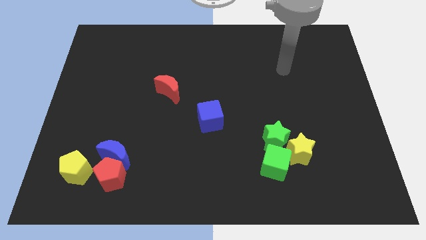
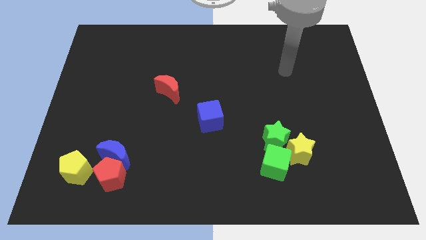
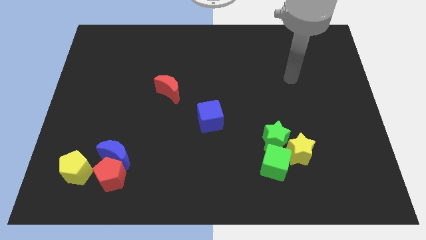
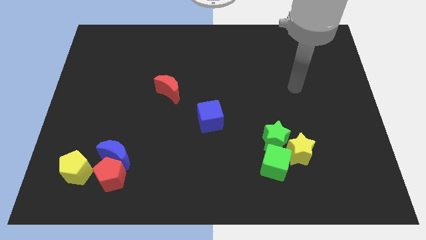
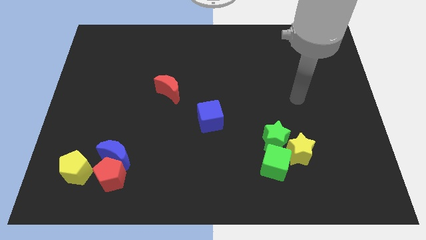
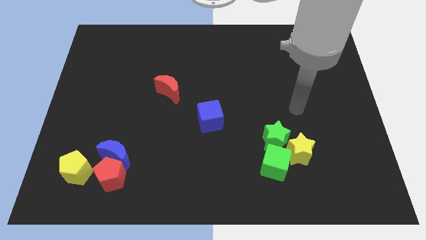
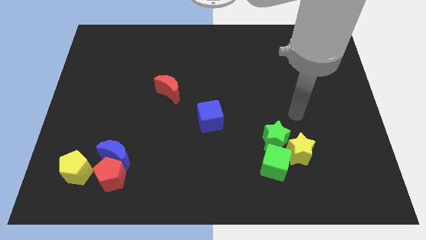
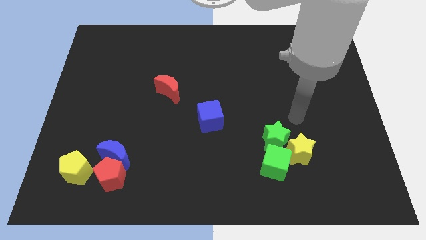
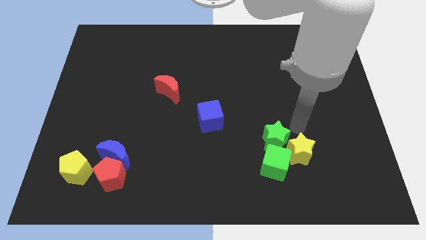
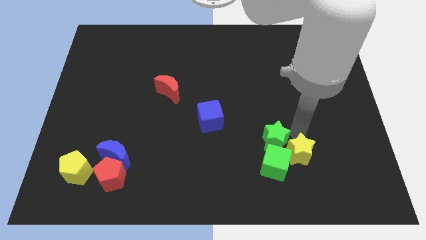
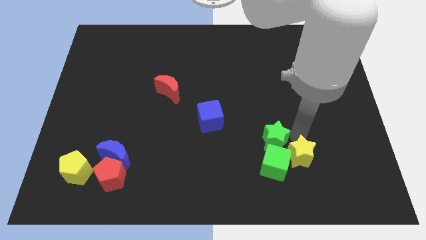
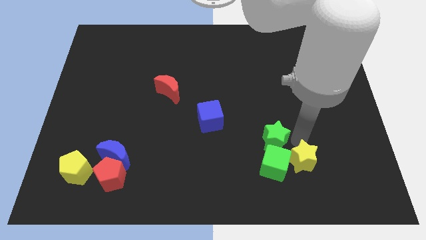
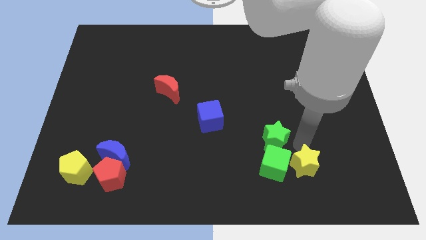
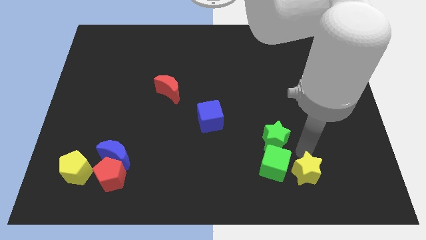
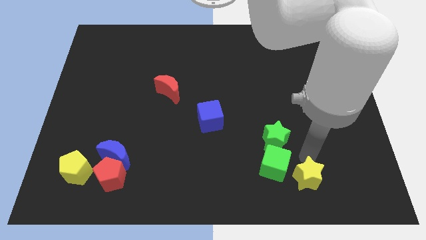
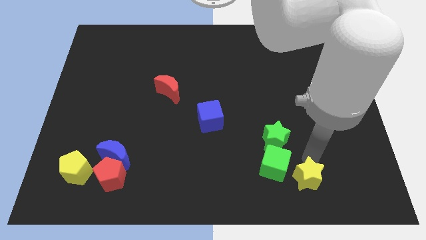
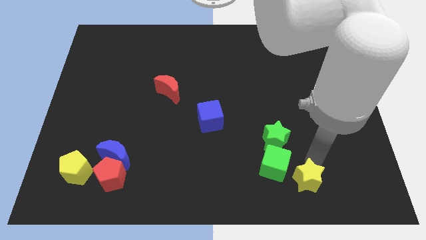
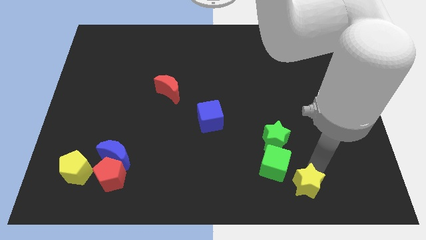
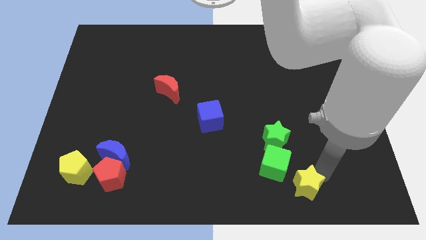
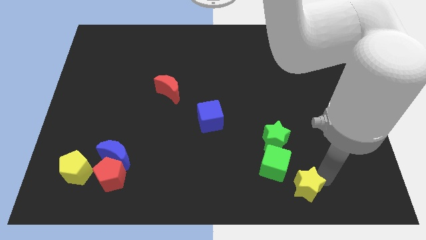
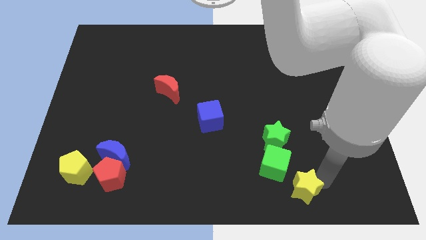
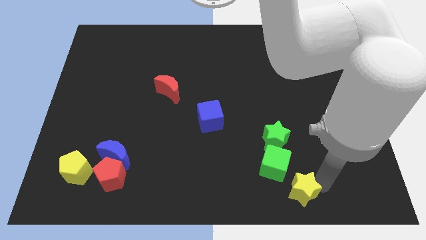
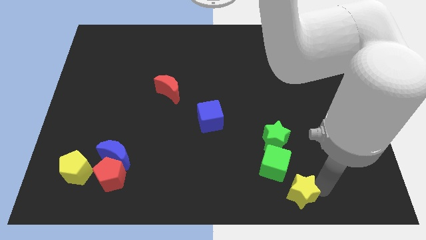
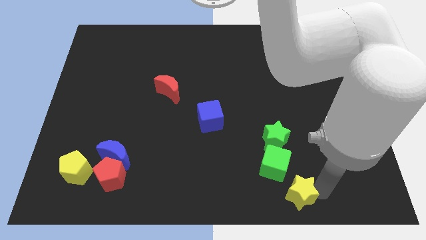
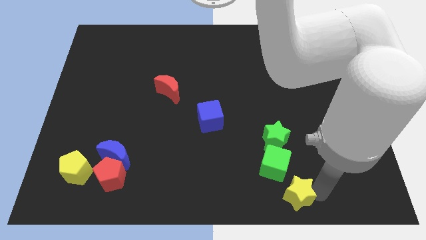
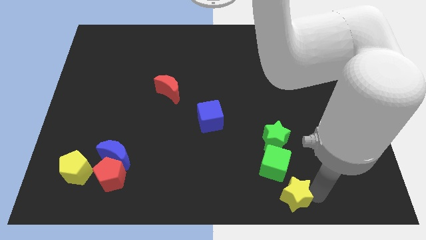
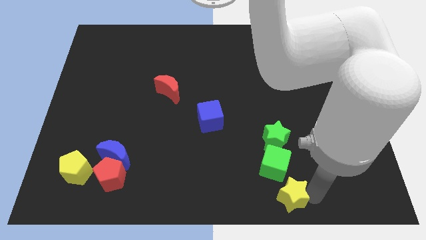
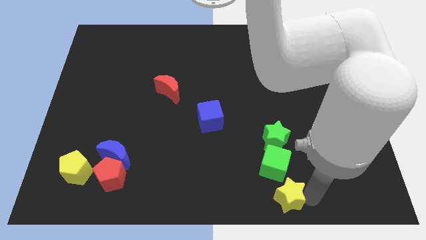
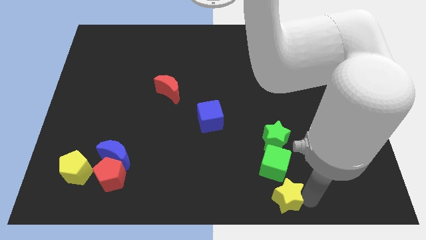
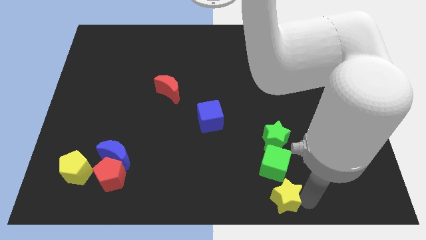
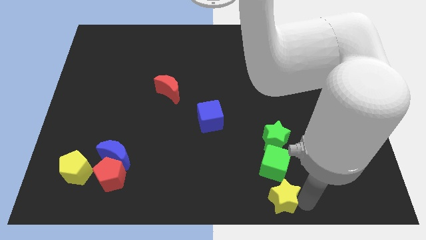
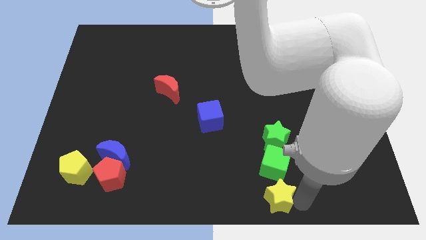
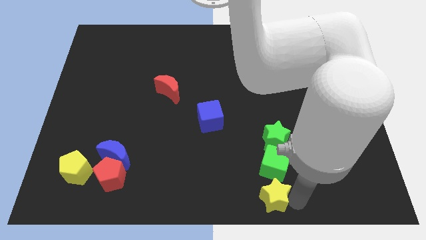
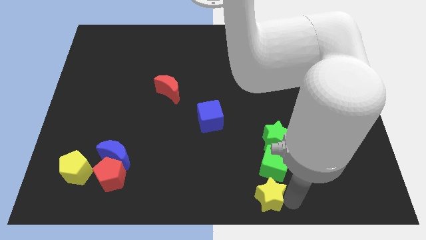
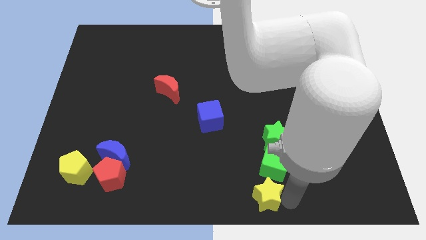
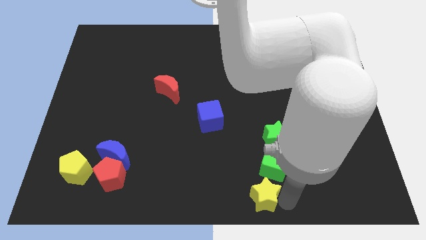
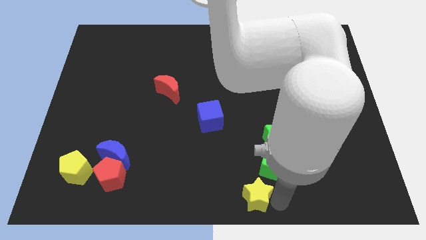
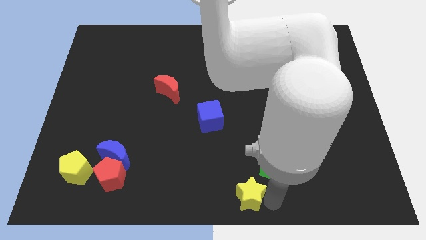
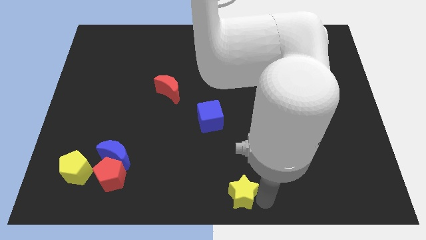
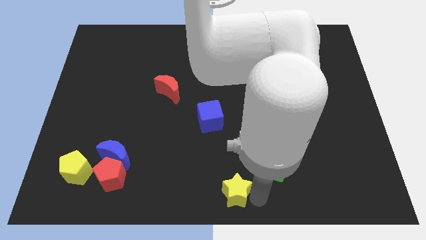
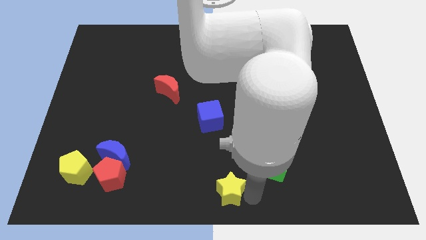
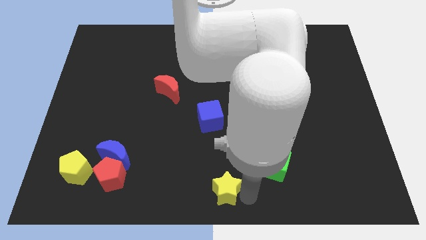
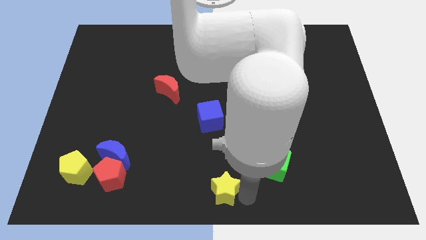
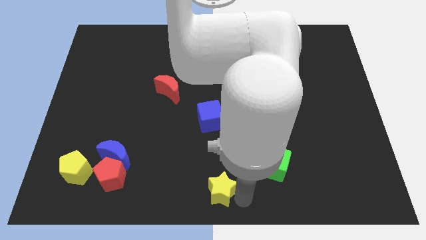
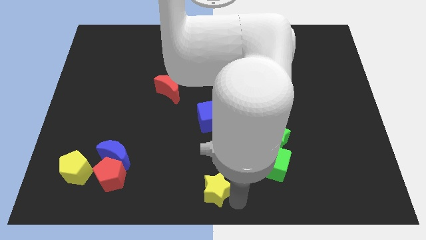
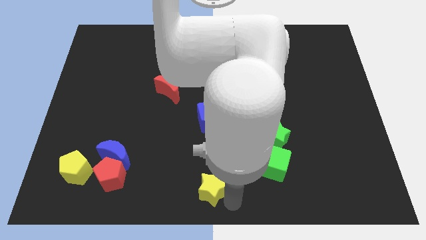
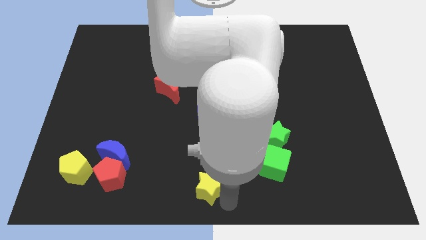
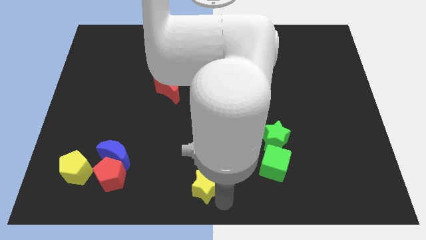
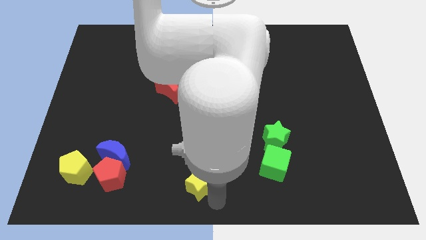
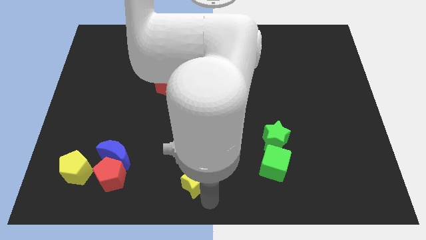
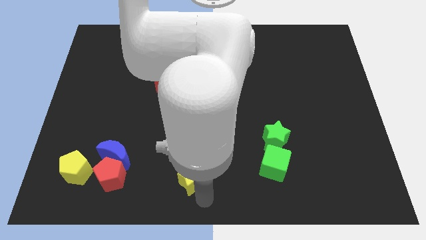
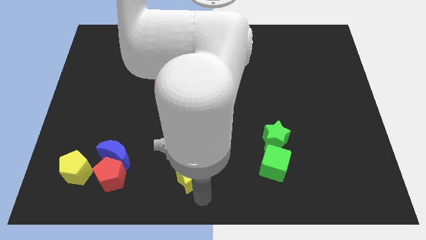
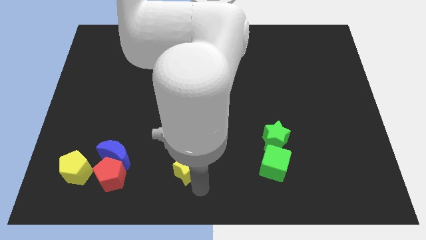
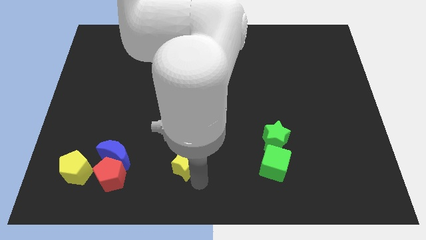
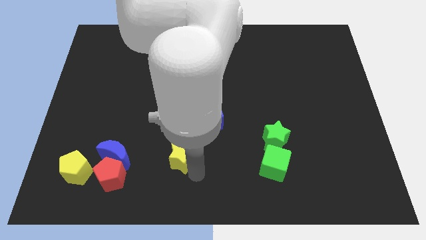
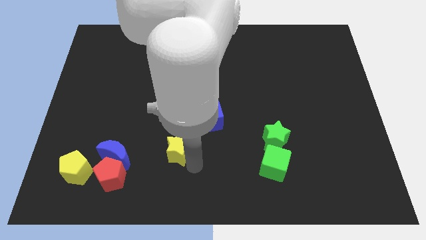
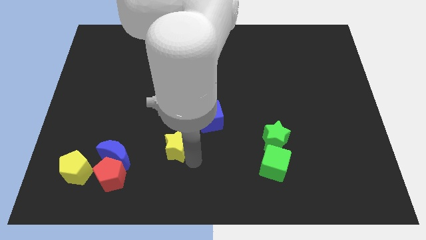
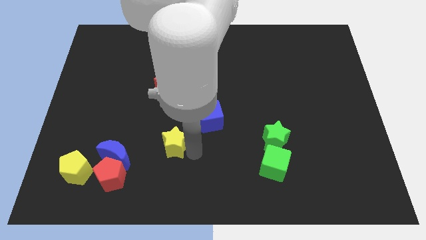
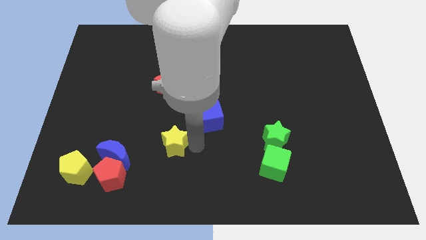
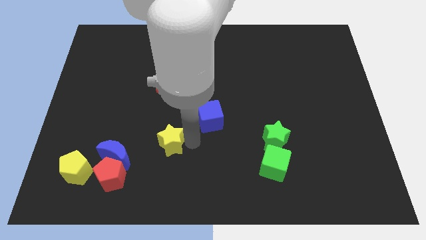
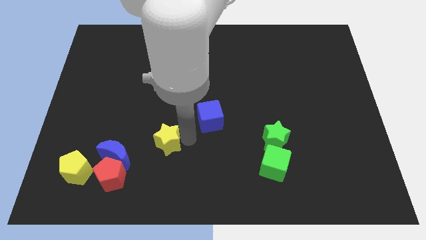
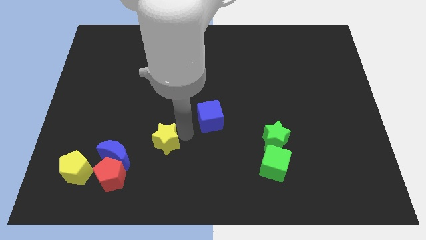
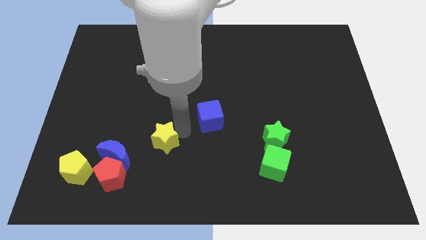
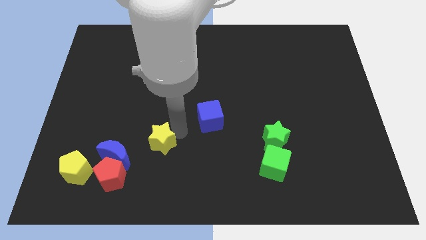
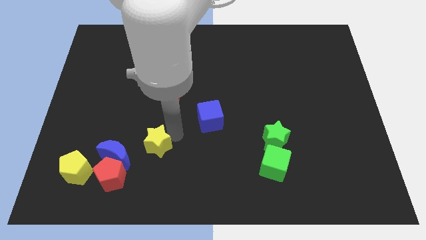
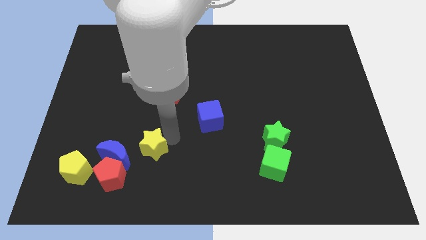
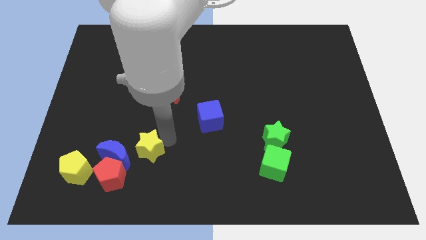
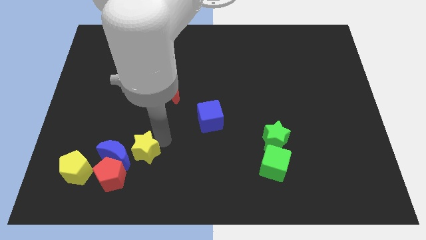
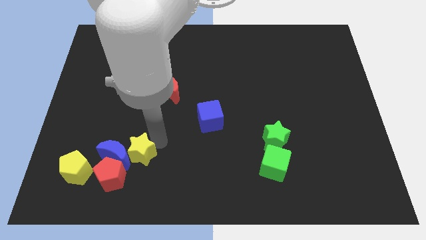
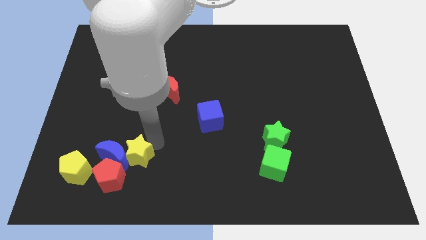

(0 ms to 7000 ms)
slide the yellow star towards the blue moon

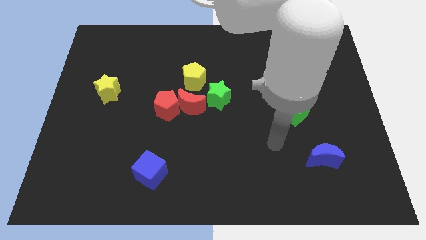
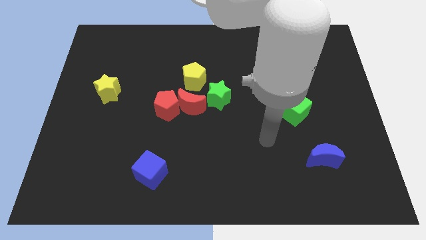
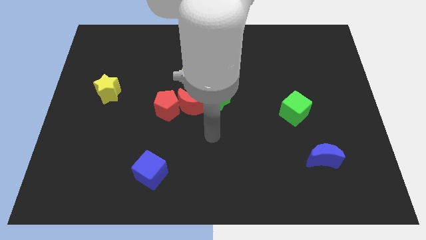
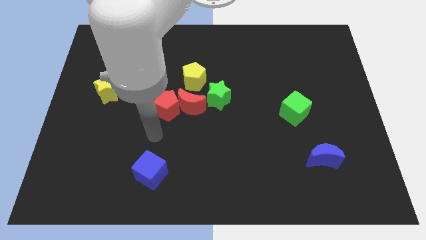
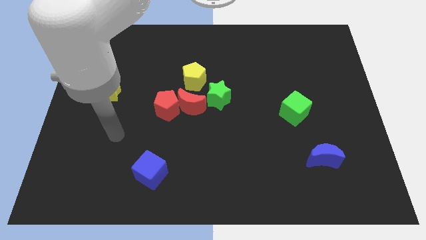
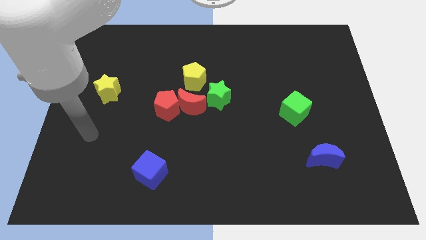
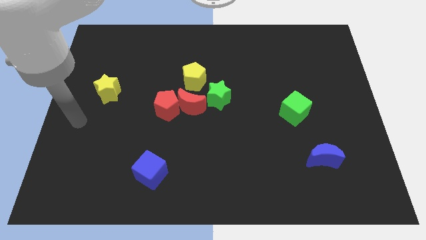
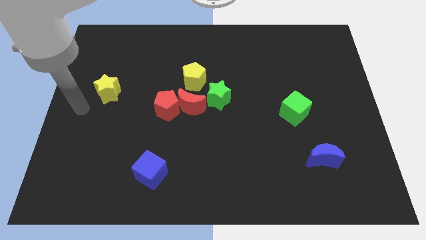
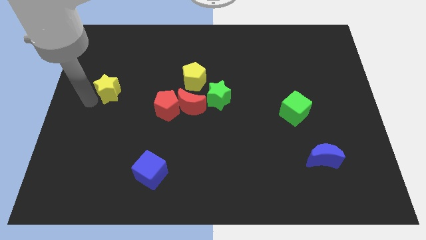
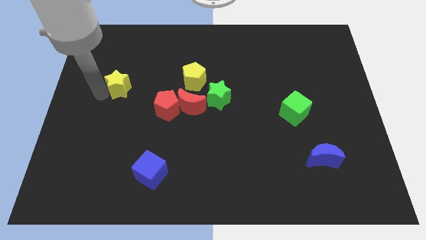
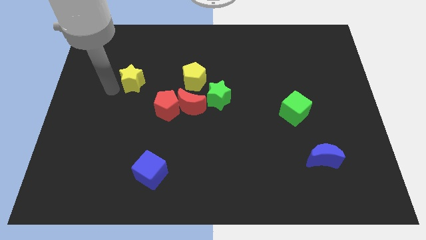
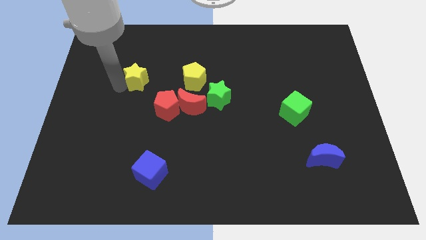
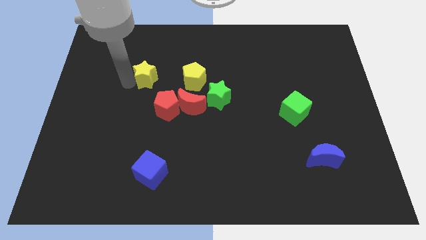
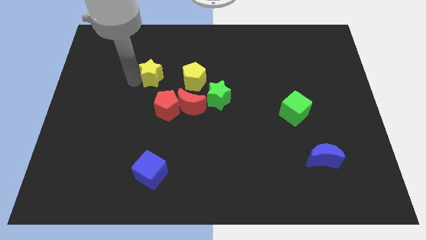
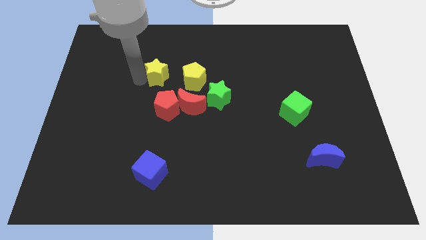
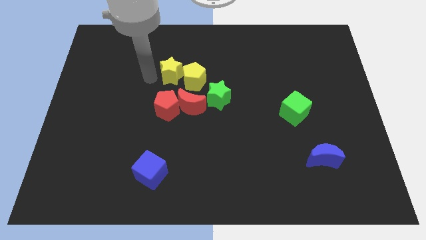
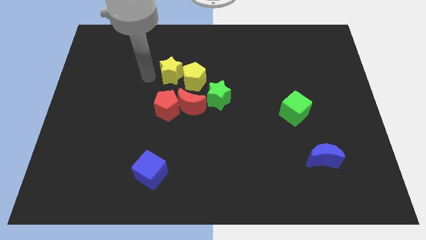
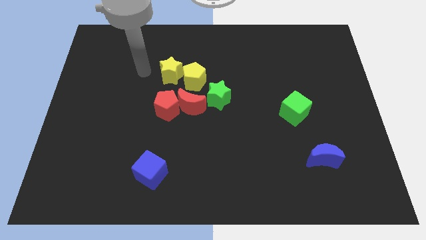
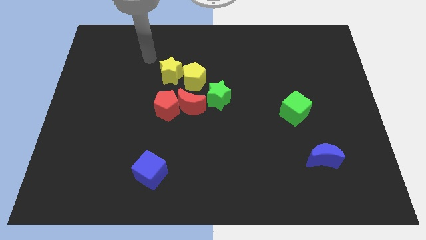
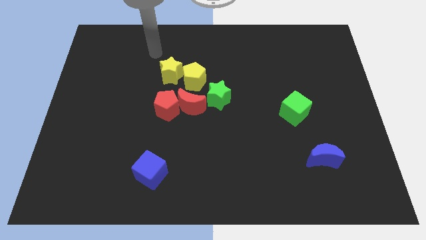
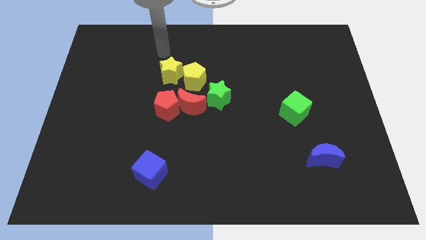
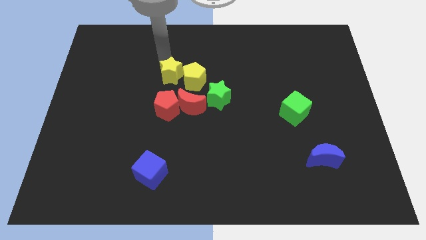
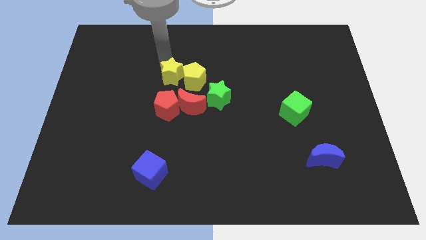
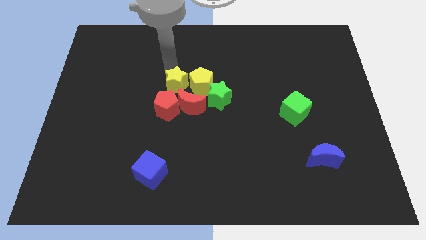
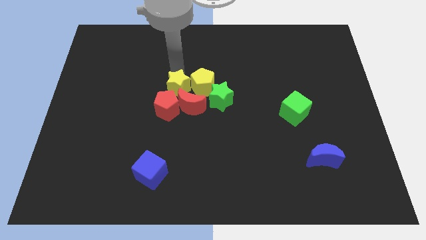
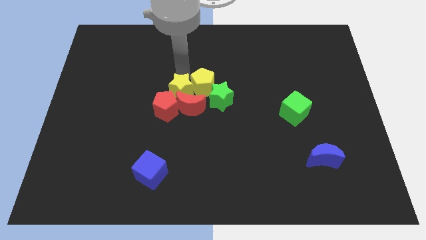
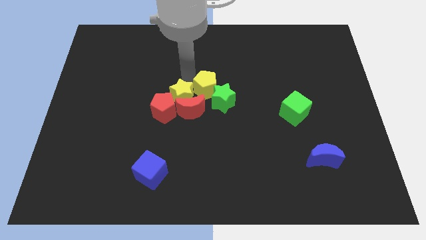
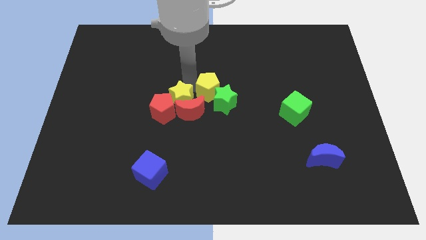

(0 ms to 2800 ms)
move the yellow star towards the red moon
